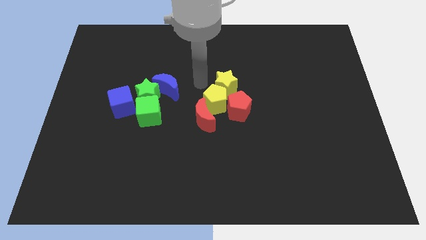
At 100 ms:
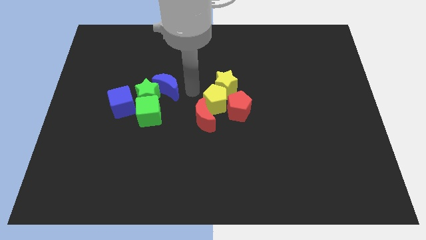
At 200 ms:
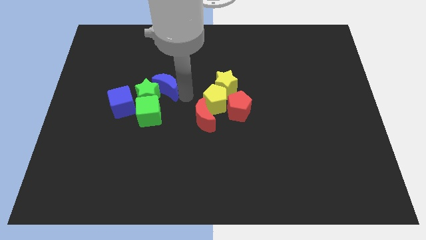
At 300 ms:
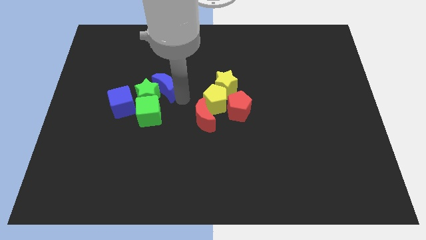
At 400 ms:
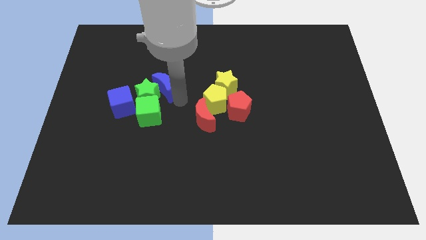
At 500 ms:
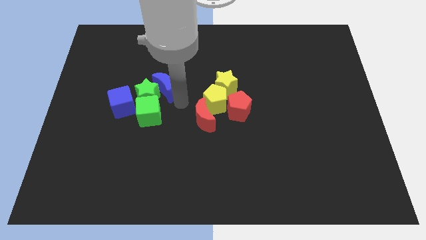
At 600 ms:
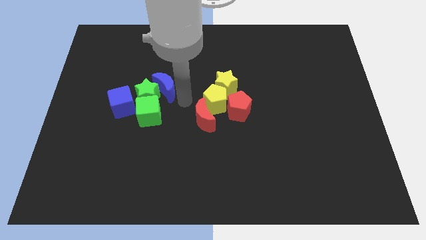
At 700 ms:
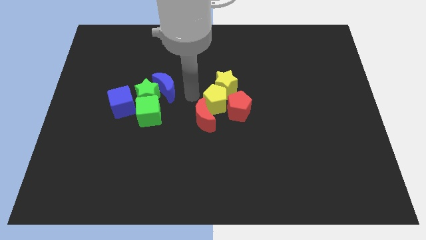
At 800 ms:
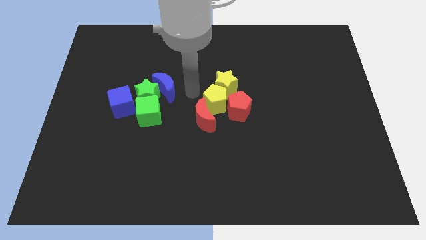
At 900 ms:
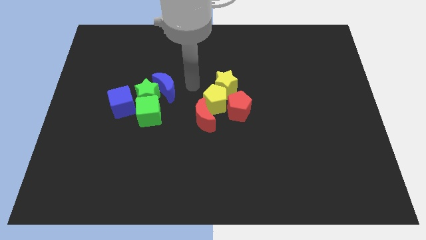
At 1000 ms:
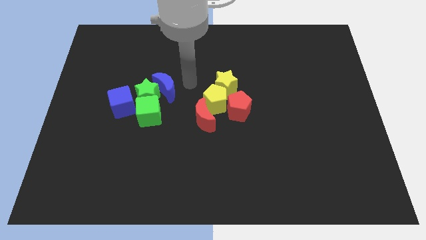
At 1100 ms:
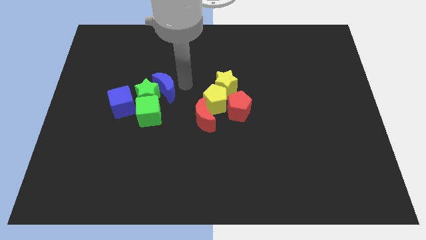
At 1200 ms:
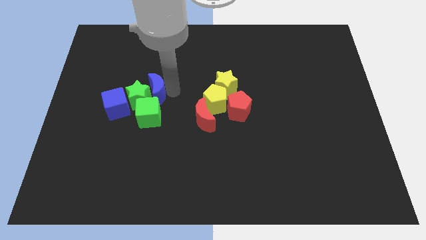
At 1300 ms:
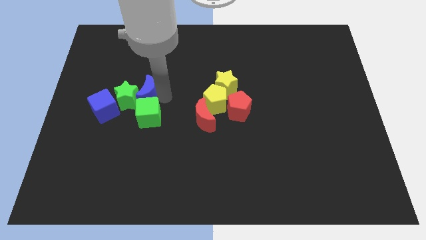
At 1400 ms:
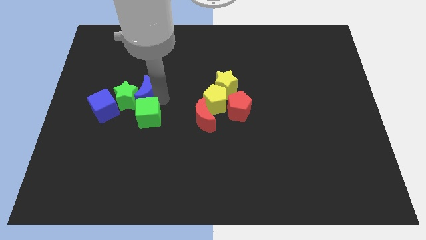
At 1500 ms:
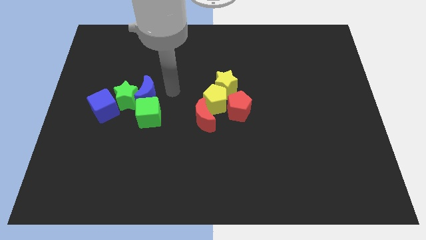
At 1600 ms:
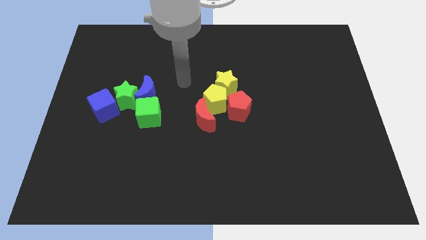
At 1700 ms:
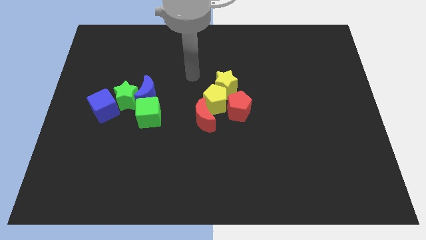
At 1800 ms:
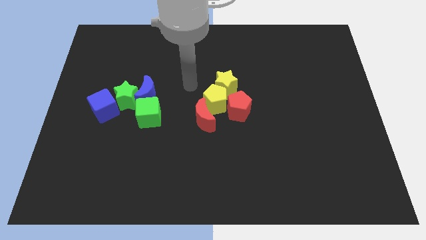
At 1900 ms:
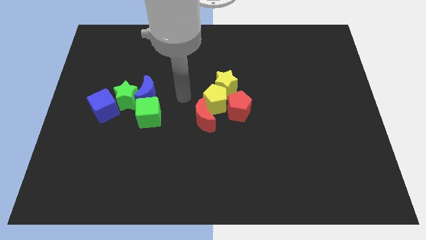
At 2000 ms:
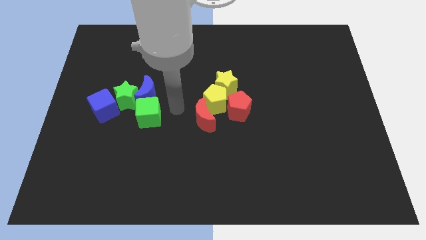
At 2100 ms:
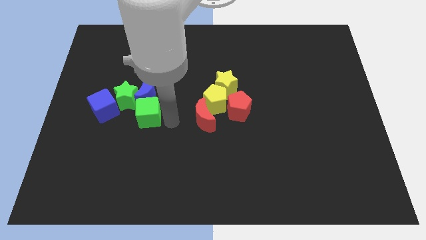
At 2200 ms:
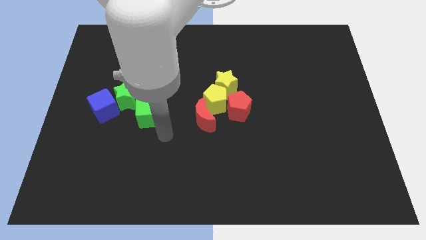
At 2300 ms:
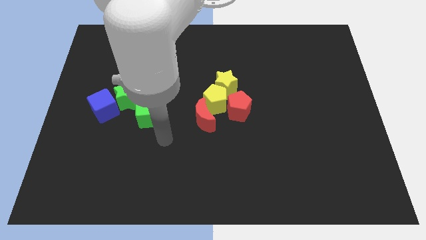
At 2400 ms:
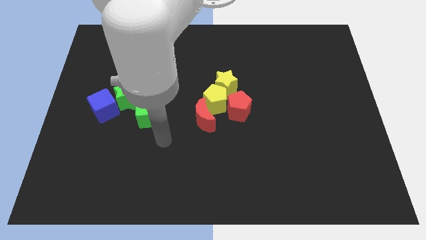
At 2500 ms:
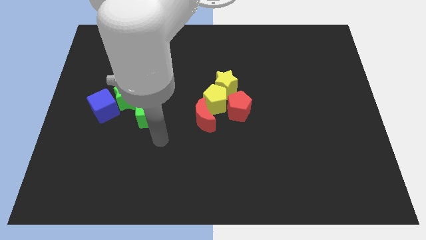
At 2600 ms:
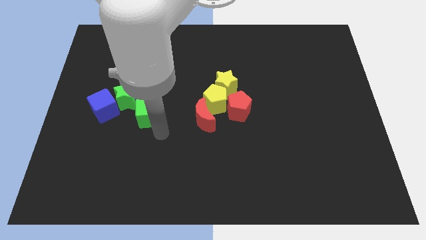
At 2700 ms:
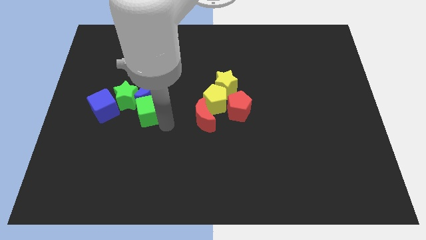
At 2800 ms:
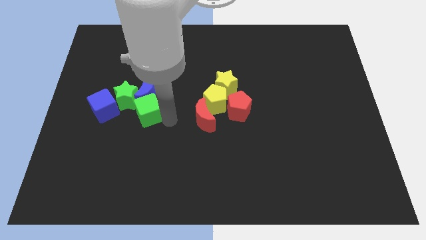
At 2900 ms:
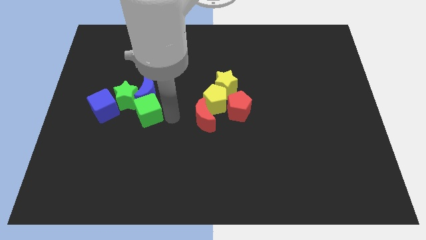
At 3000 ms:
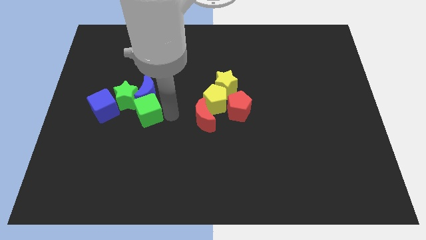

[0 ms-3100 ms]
point your arm at the right side of the green cube

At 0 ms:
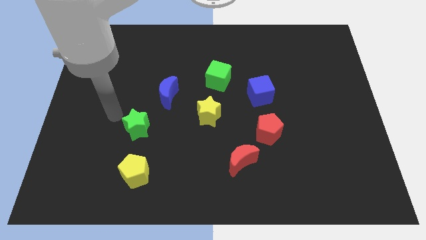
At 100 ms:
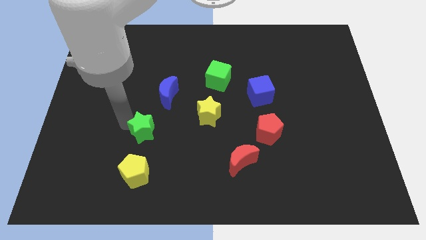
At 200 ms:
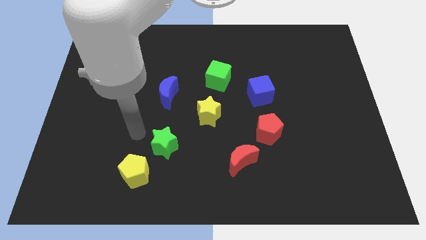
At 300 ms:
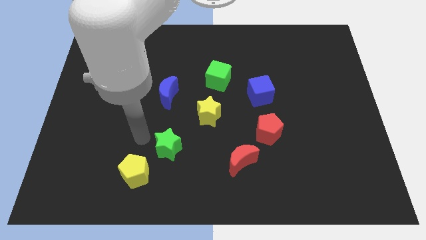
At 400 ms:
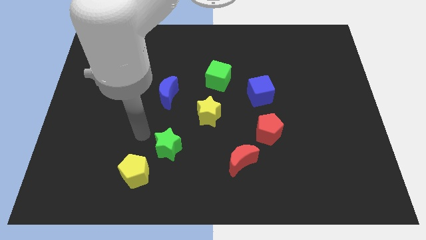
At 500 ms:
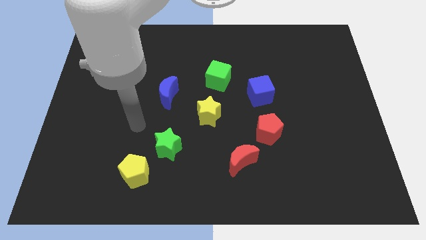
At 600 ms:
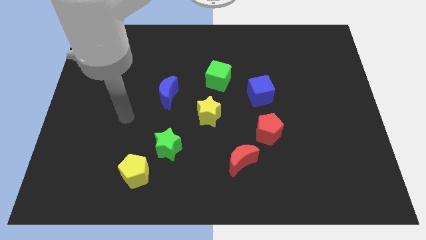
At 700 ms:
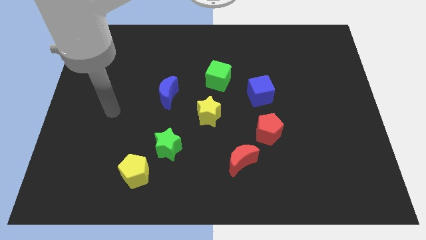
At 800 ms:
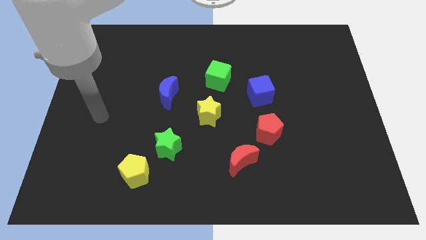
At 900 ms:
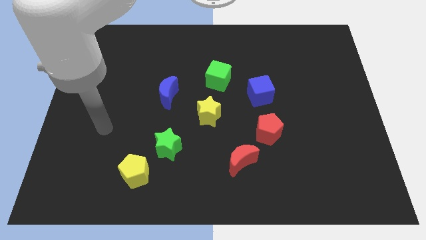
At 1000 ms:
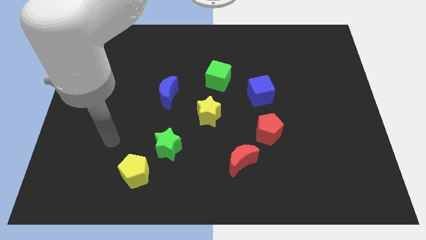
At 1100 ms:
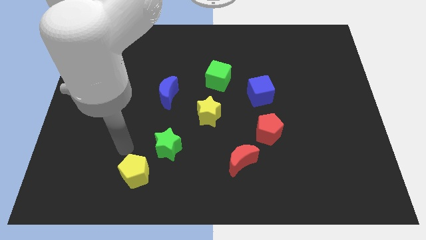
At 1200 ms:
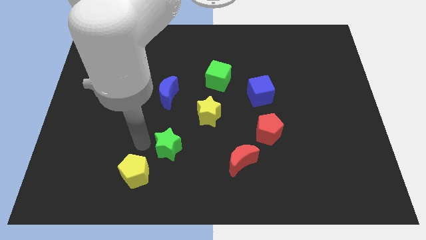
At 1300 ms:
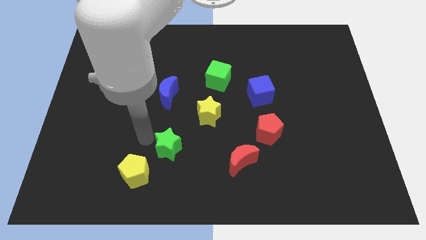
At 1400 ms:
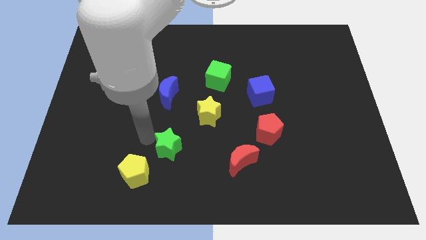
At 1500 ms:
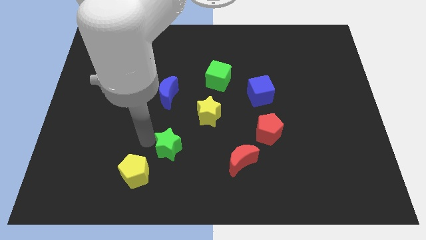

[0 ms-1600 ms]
put the green star diagonally top right to the yellow pentagon

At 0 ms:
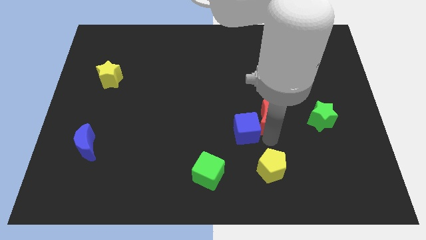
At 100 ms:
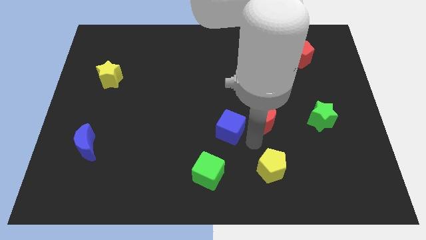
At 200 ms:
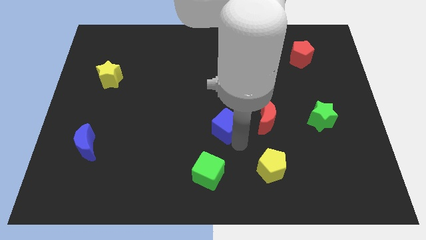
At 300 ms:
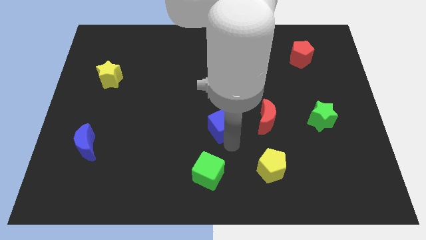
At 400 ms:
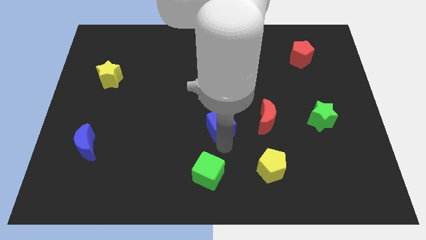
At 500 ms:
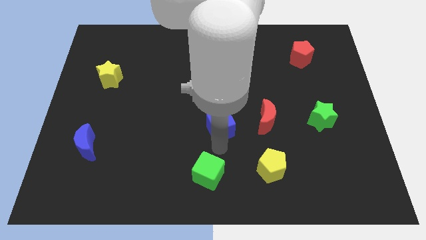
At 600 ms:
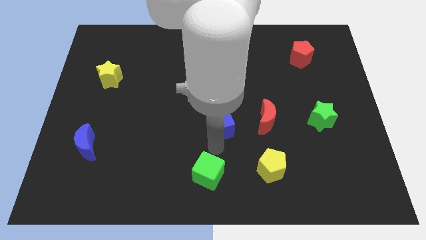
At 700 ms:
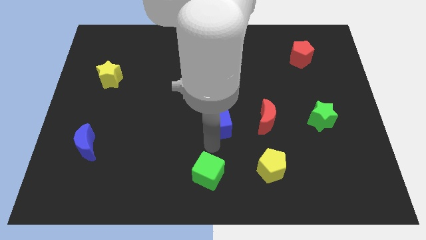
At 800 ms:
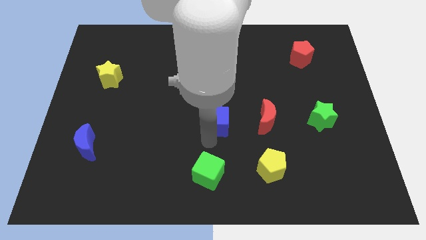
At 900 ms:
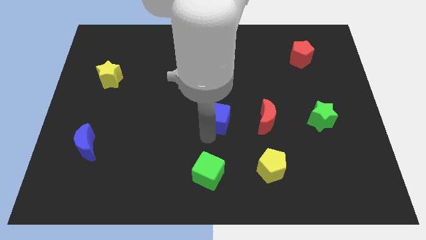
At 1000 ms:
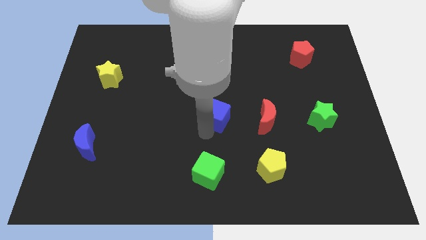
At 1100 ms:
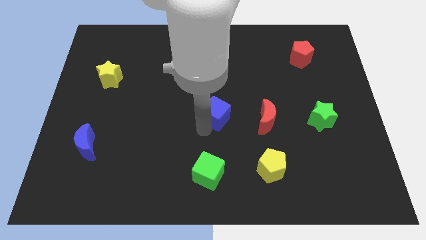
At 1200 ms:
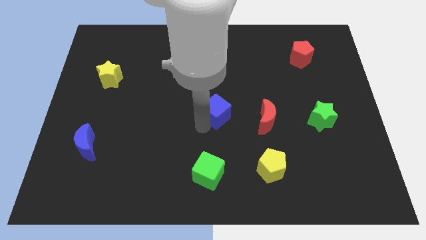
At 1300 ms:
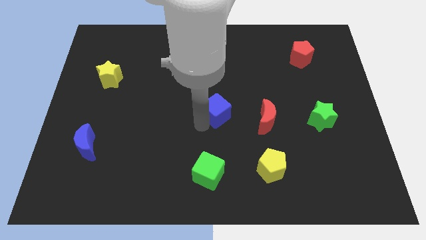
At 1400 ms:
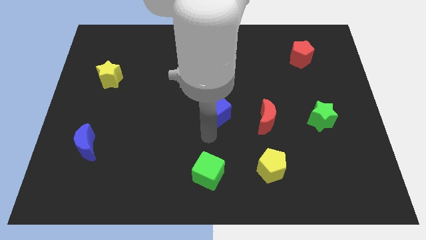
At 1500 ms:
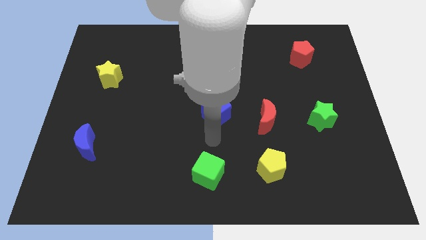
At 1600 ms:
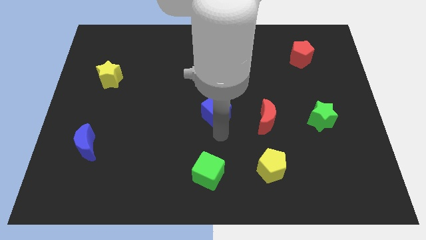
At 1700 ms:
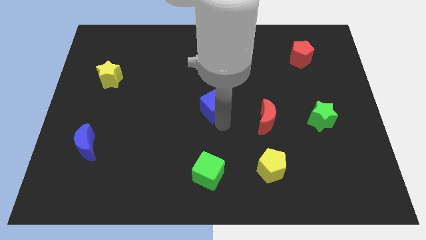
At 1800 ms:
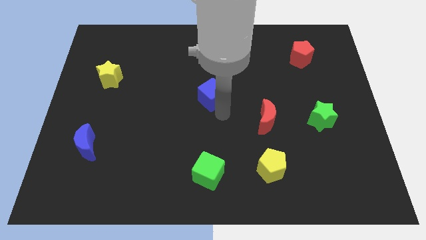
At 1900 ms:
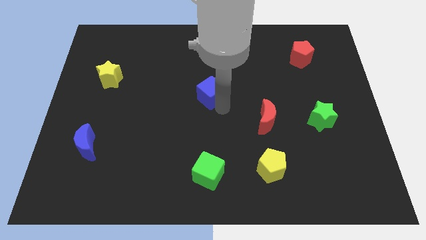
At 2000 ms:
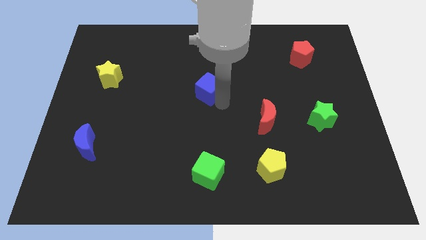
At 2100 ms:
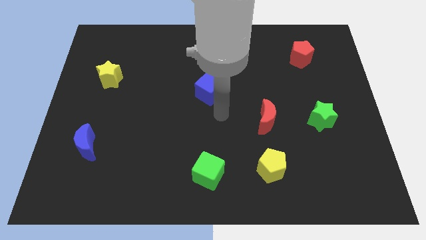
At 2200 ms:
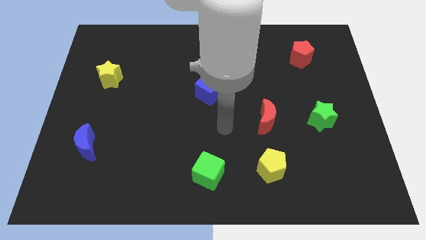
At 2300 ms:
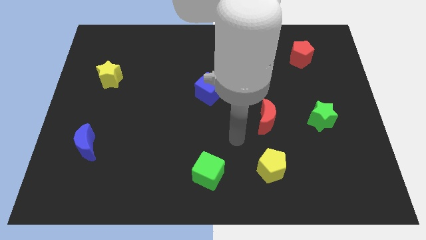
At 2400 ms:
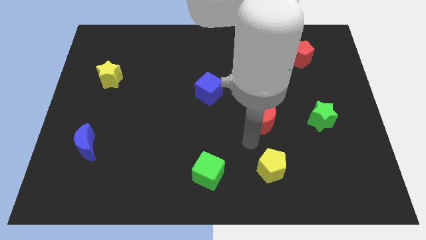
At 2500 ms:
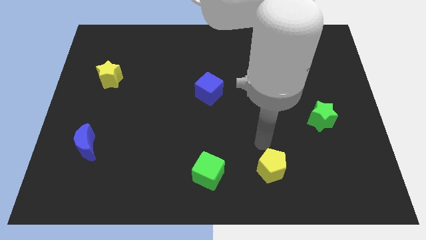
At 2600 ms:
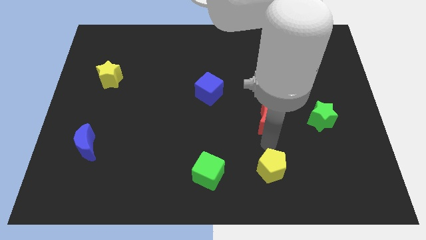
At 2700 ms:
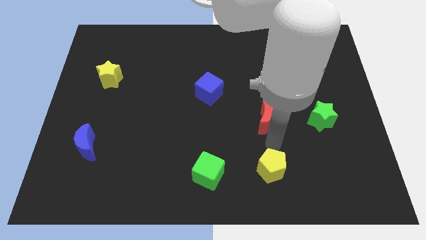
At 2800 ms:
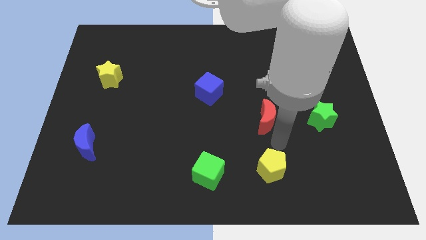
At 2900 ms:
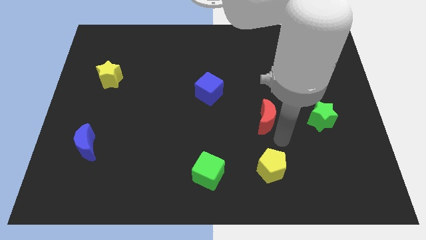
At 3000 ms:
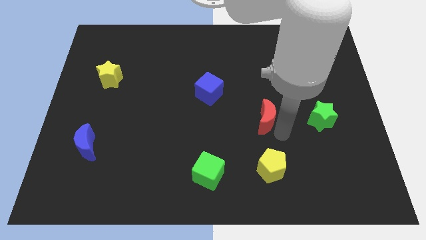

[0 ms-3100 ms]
push the blue cube to the bottom right of the yellow star

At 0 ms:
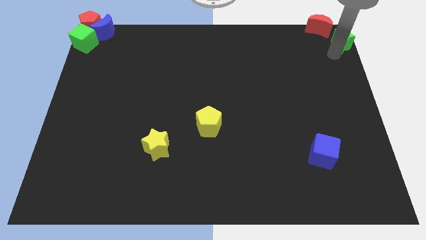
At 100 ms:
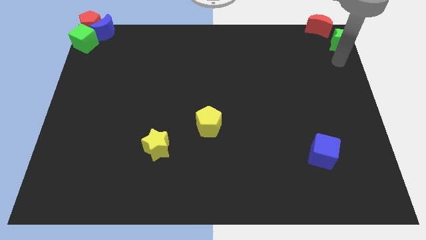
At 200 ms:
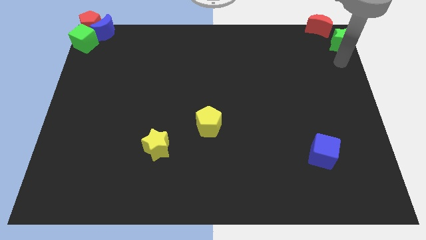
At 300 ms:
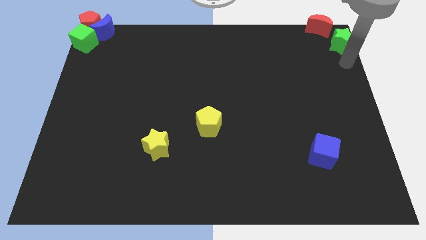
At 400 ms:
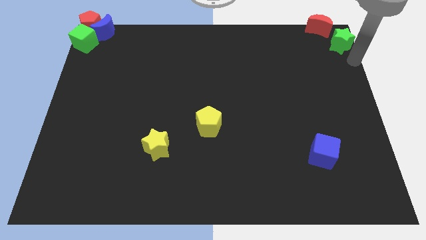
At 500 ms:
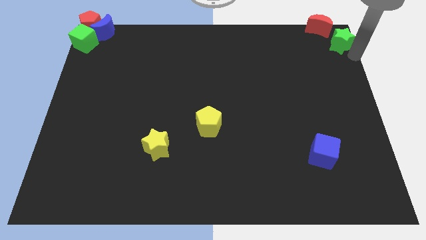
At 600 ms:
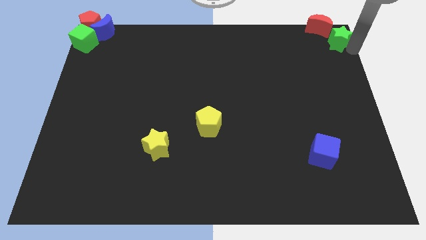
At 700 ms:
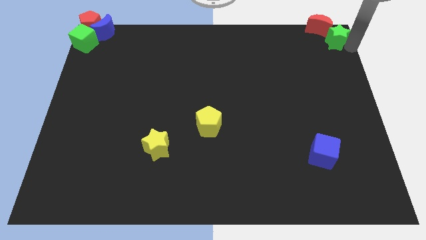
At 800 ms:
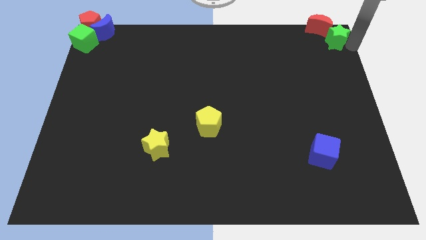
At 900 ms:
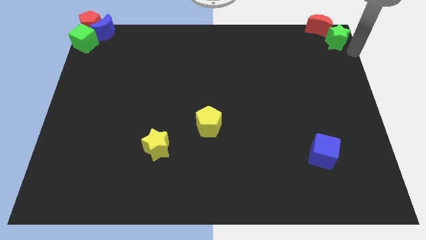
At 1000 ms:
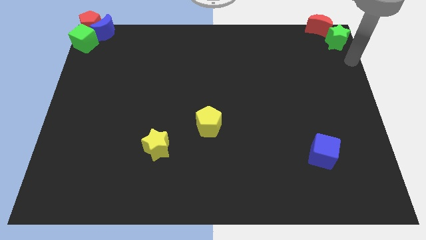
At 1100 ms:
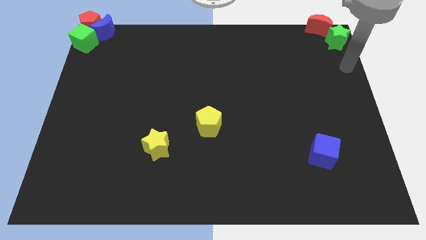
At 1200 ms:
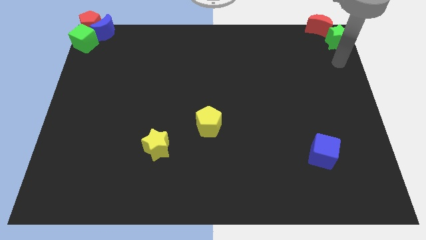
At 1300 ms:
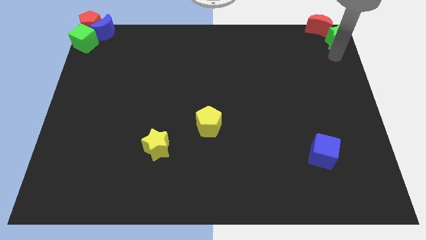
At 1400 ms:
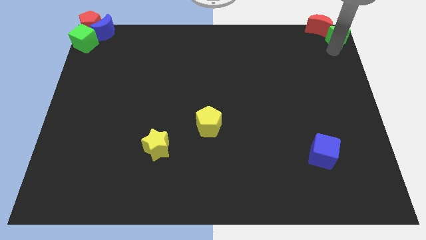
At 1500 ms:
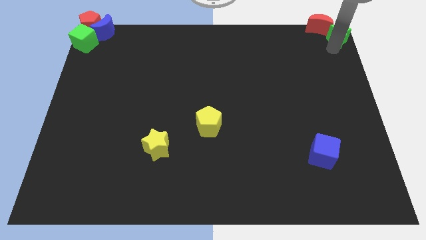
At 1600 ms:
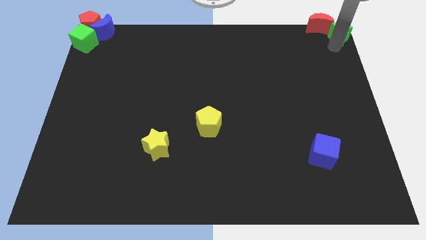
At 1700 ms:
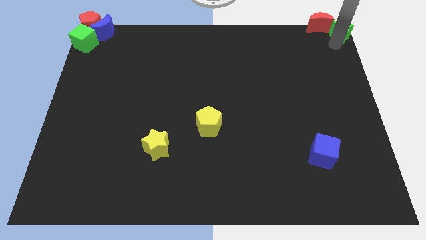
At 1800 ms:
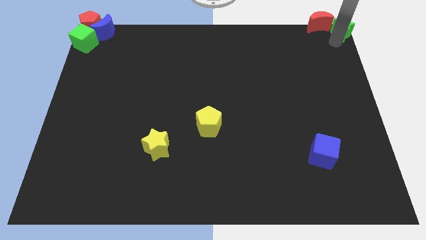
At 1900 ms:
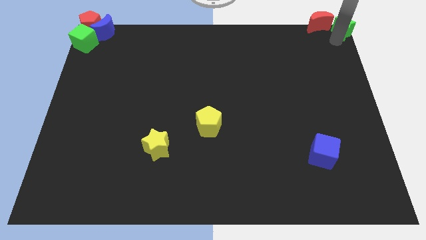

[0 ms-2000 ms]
put the green star at the top left of the board
